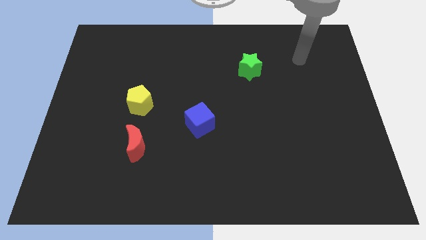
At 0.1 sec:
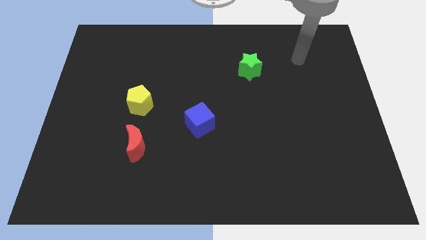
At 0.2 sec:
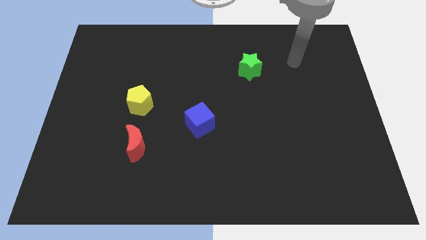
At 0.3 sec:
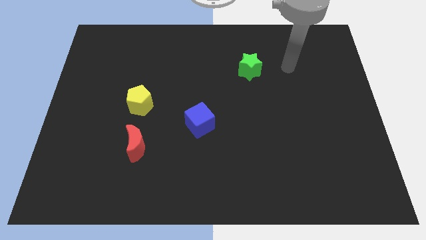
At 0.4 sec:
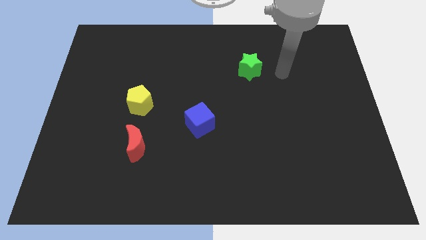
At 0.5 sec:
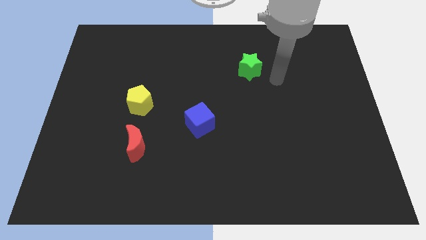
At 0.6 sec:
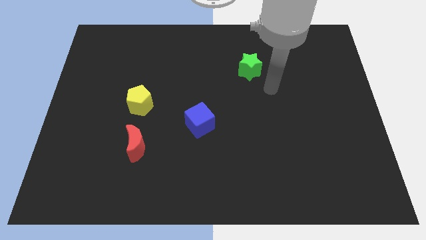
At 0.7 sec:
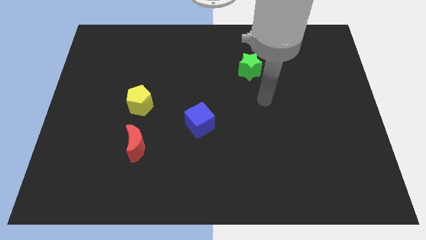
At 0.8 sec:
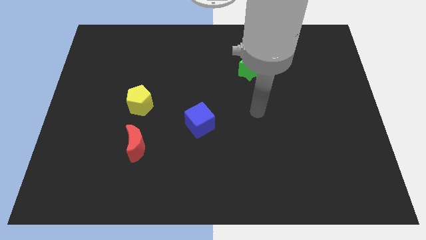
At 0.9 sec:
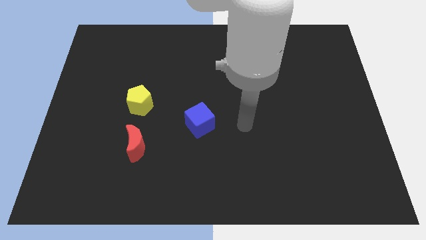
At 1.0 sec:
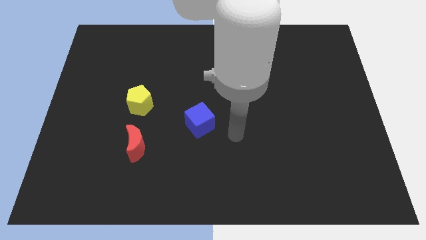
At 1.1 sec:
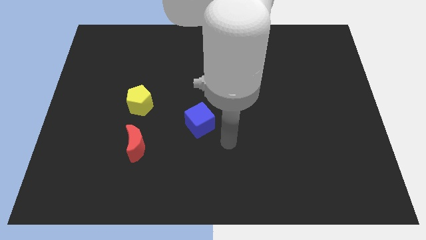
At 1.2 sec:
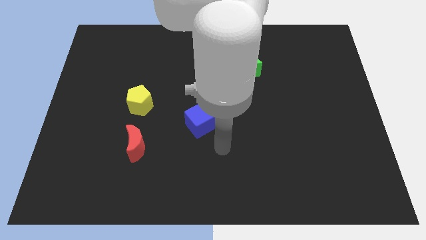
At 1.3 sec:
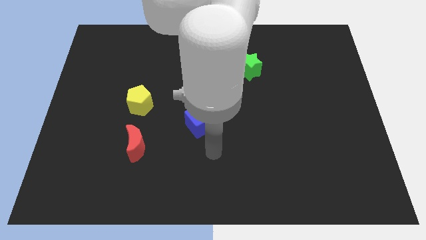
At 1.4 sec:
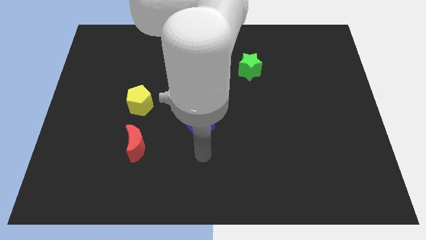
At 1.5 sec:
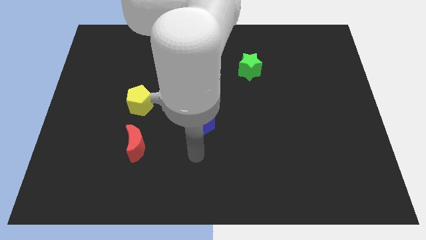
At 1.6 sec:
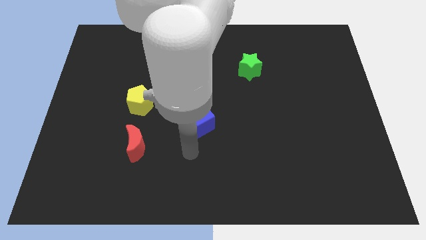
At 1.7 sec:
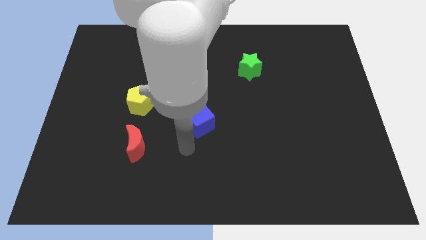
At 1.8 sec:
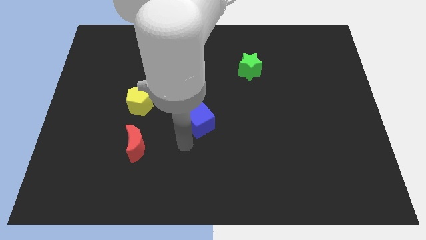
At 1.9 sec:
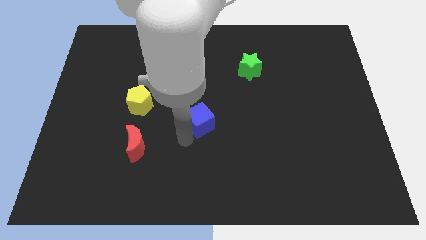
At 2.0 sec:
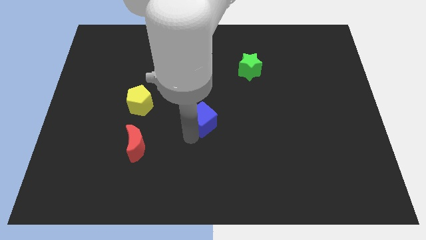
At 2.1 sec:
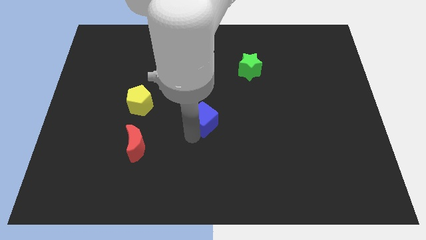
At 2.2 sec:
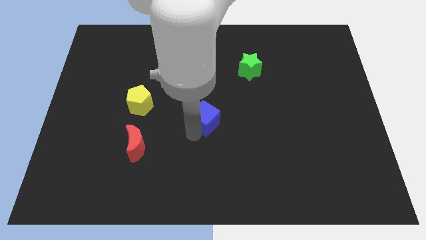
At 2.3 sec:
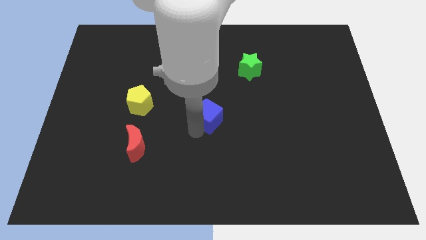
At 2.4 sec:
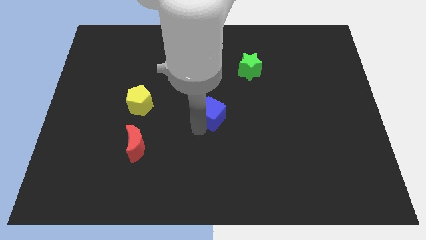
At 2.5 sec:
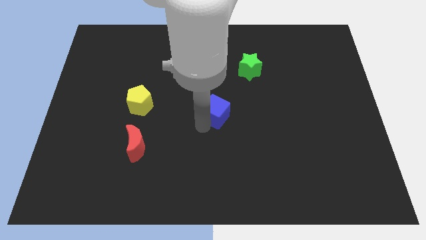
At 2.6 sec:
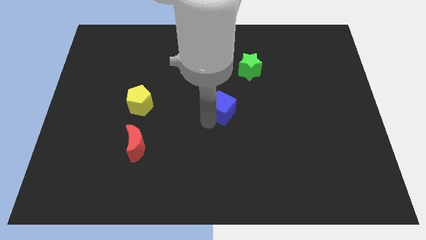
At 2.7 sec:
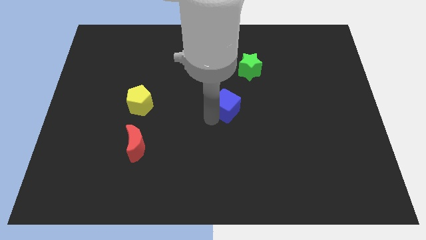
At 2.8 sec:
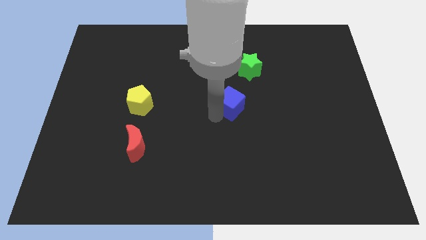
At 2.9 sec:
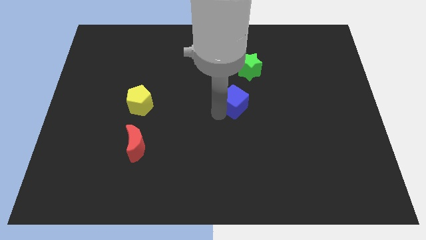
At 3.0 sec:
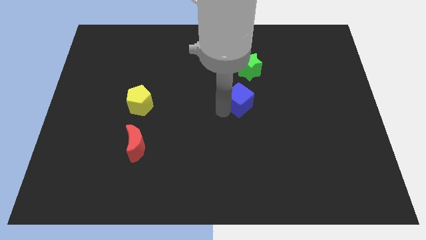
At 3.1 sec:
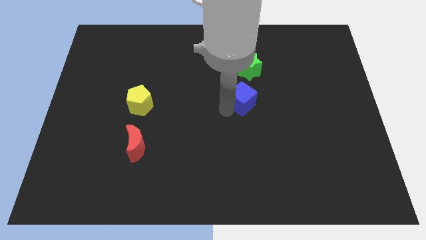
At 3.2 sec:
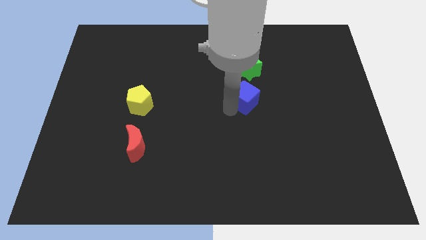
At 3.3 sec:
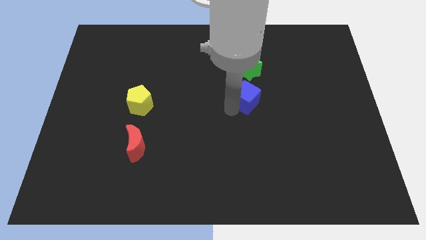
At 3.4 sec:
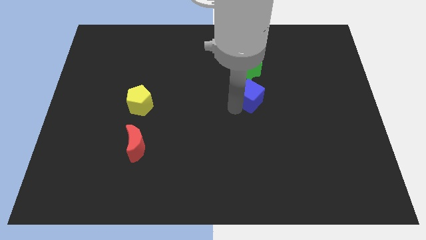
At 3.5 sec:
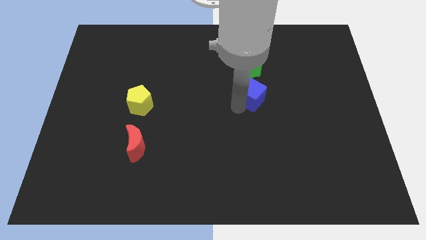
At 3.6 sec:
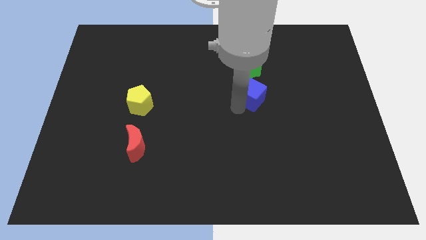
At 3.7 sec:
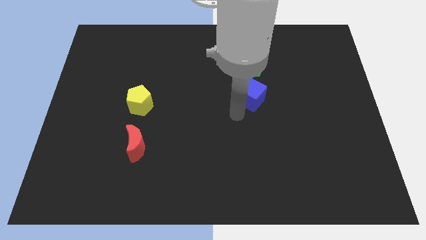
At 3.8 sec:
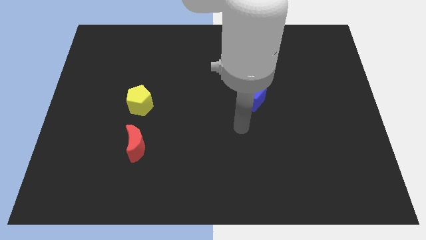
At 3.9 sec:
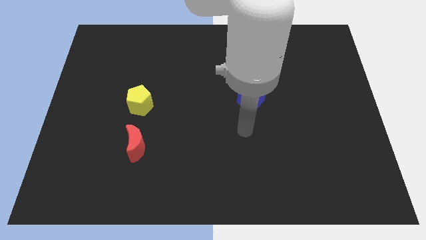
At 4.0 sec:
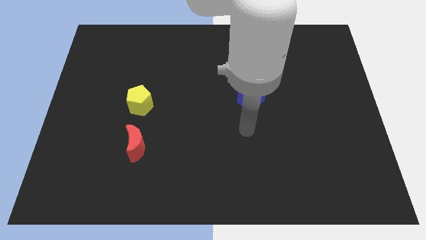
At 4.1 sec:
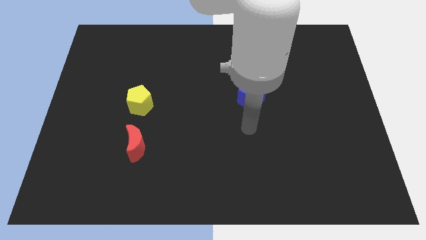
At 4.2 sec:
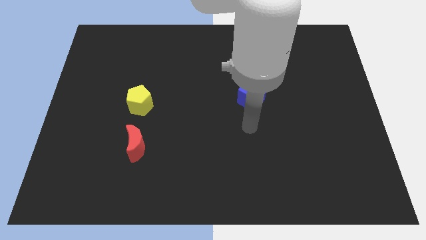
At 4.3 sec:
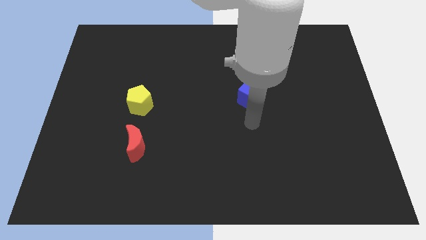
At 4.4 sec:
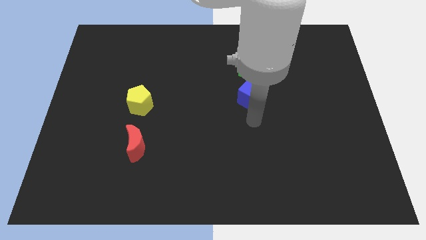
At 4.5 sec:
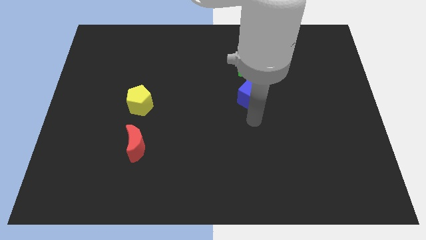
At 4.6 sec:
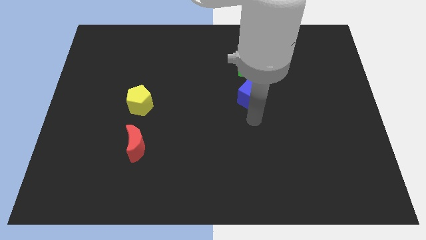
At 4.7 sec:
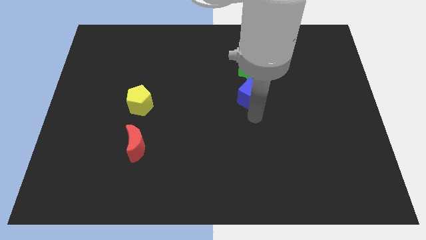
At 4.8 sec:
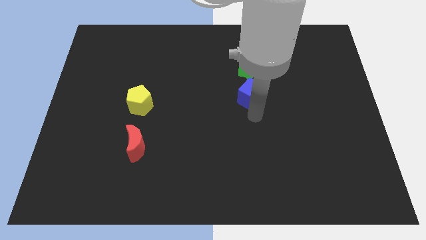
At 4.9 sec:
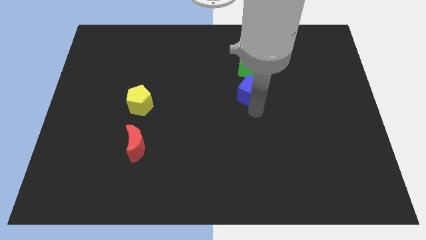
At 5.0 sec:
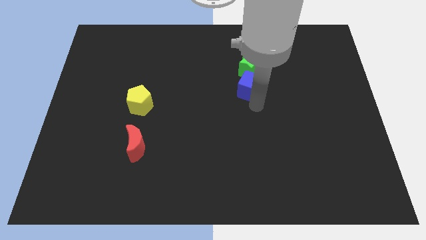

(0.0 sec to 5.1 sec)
put the blue block next to the green star

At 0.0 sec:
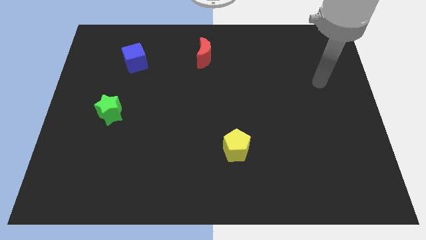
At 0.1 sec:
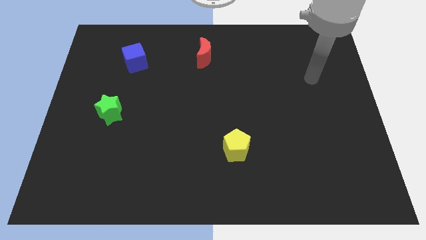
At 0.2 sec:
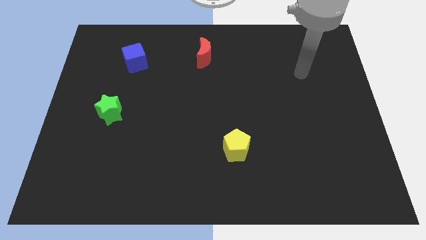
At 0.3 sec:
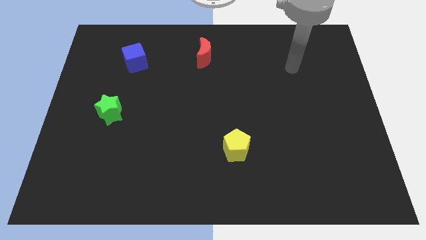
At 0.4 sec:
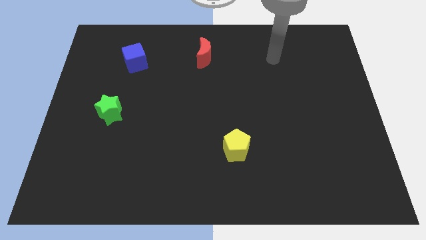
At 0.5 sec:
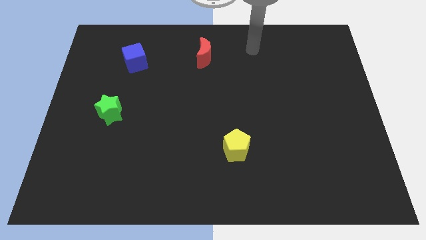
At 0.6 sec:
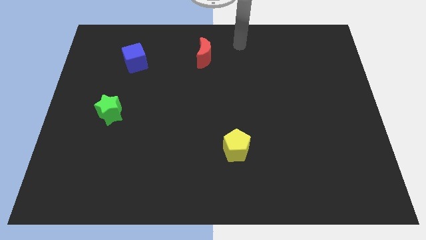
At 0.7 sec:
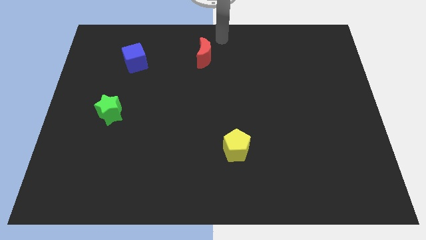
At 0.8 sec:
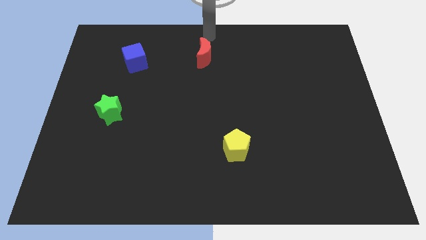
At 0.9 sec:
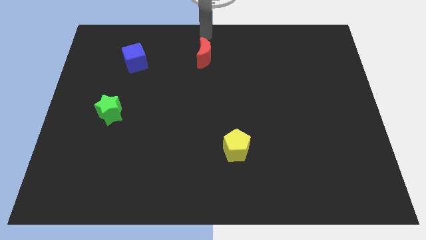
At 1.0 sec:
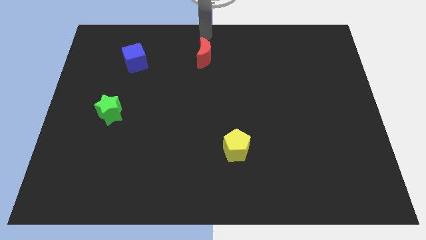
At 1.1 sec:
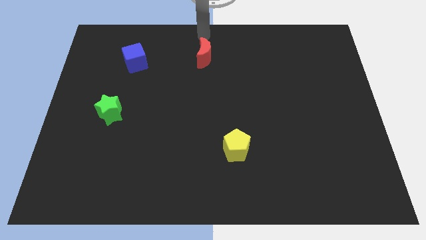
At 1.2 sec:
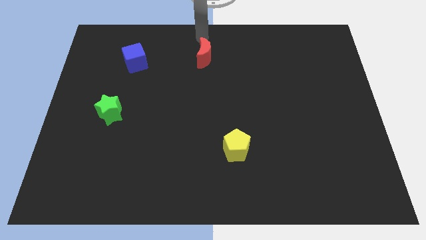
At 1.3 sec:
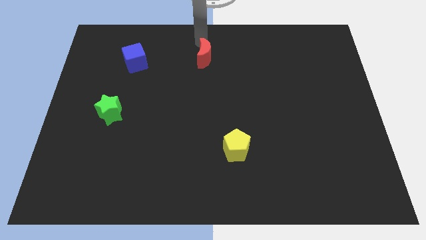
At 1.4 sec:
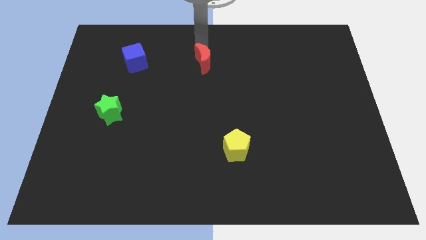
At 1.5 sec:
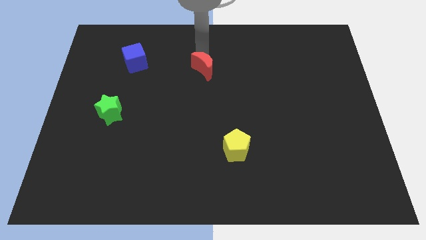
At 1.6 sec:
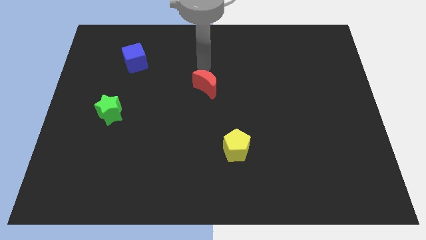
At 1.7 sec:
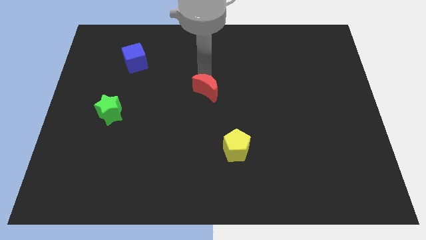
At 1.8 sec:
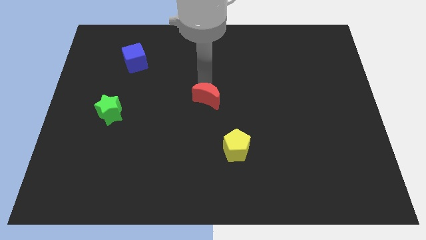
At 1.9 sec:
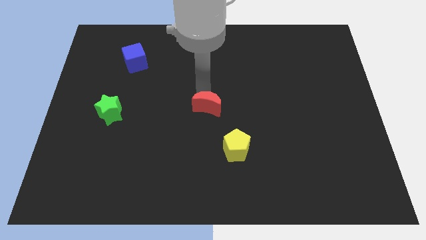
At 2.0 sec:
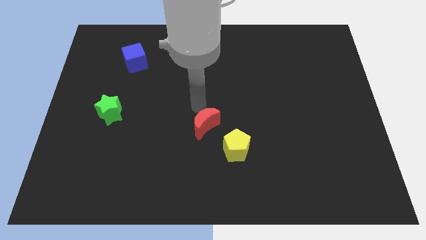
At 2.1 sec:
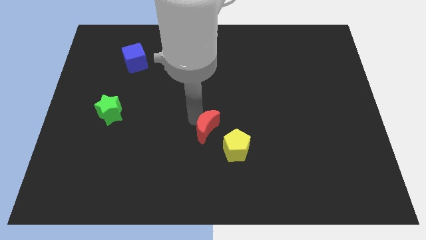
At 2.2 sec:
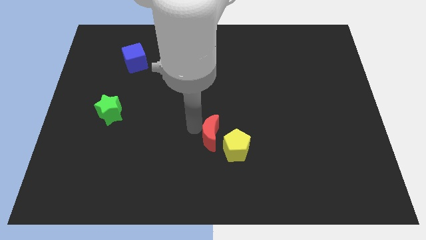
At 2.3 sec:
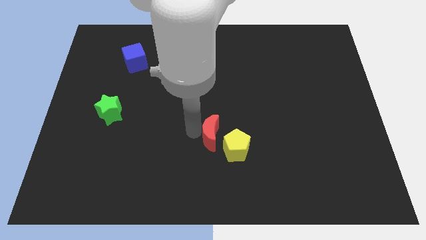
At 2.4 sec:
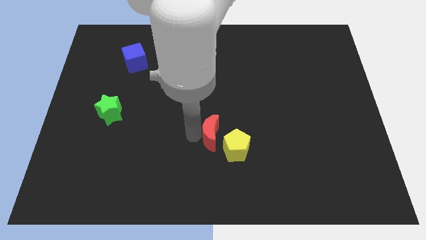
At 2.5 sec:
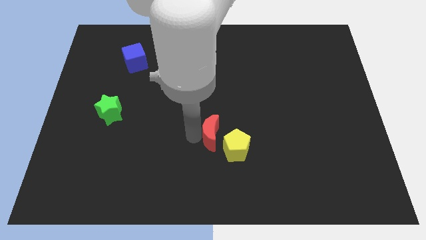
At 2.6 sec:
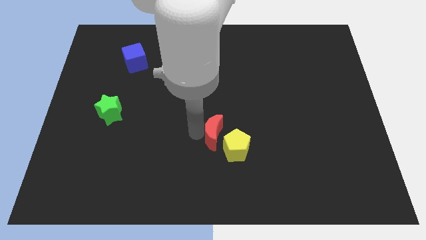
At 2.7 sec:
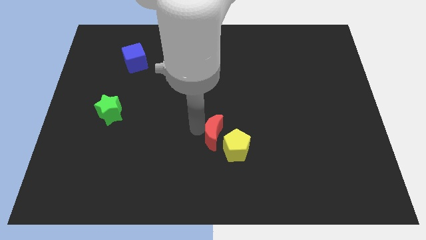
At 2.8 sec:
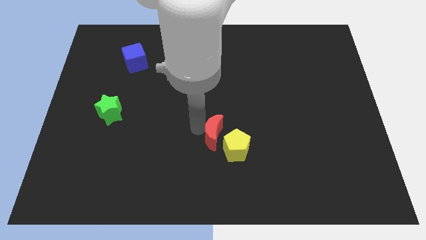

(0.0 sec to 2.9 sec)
slide the red block next to the pentagon

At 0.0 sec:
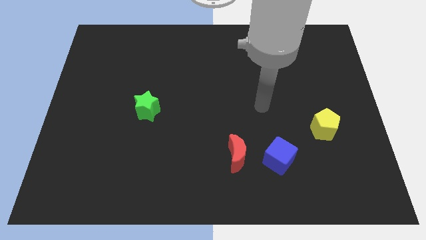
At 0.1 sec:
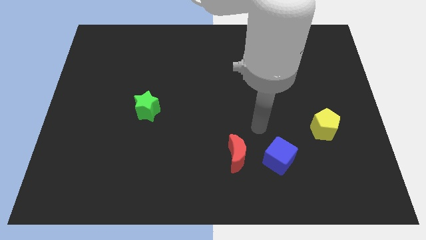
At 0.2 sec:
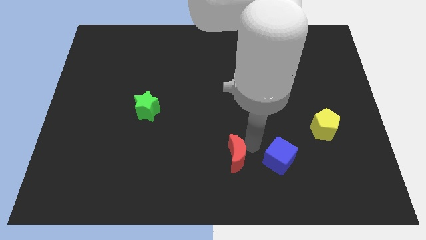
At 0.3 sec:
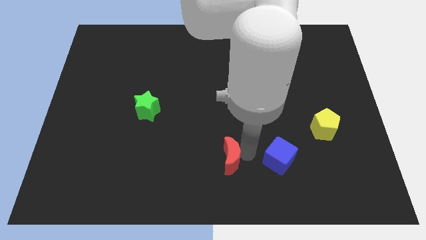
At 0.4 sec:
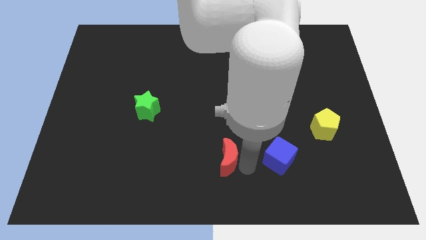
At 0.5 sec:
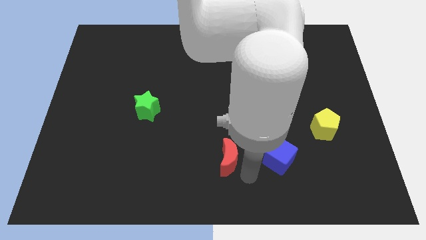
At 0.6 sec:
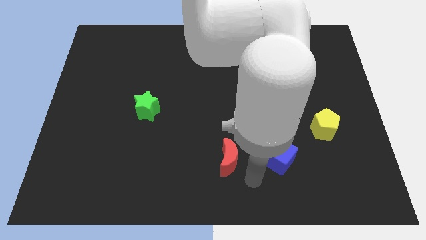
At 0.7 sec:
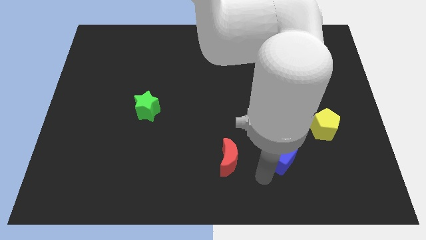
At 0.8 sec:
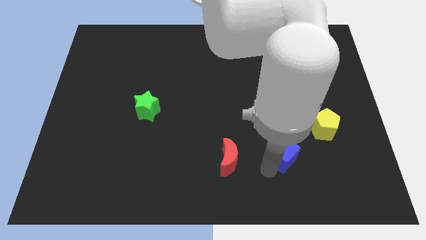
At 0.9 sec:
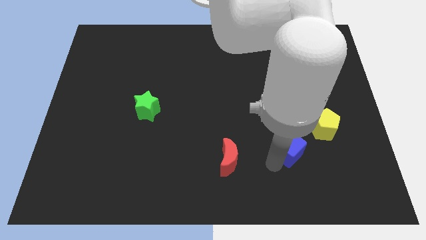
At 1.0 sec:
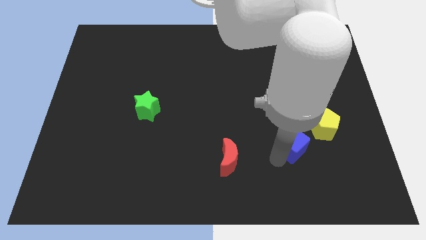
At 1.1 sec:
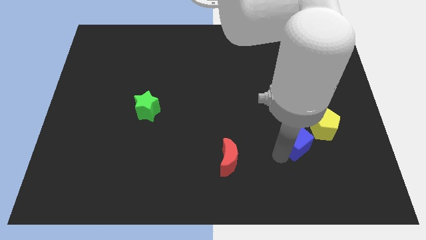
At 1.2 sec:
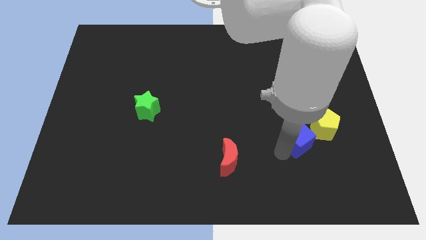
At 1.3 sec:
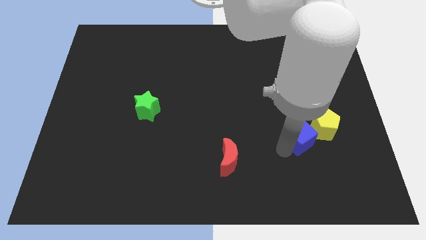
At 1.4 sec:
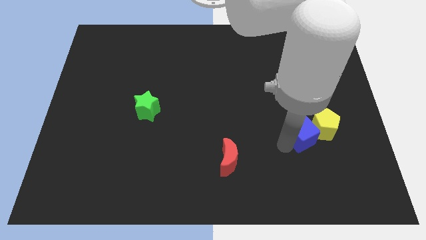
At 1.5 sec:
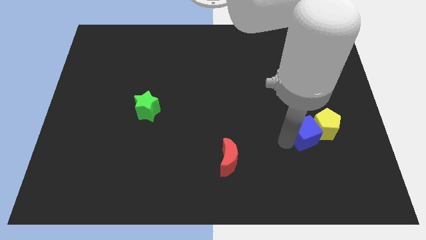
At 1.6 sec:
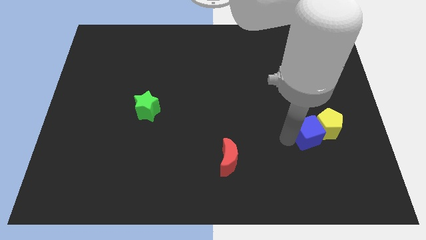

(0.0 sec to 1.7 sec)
move the blue cube towards the yellow block
